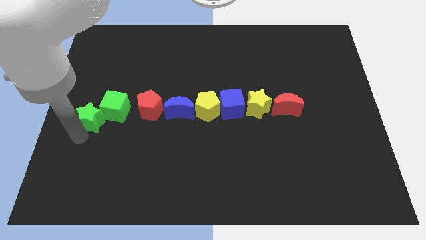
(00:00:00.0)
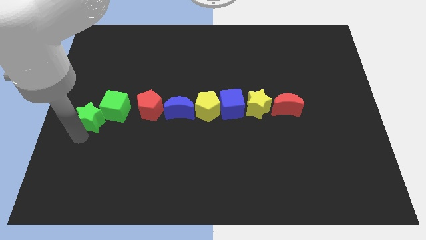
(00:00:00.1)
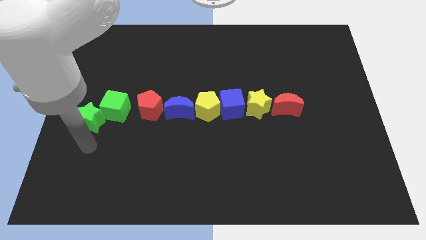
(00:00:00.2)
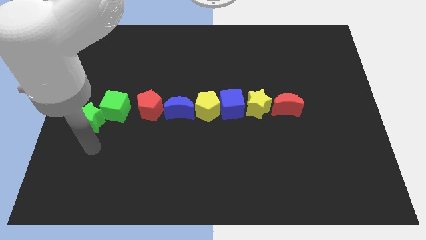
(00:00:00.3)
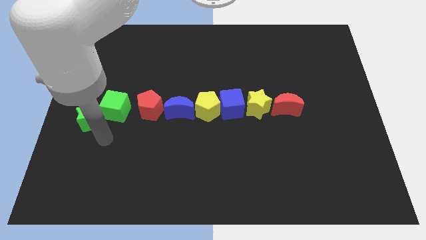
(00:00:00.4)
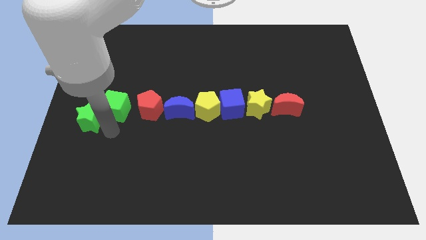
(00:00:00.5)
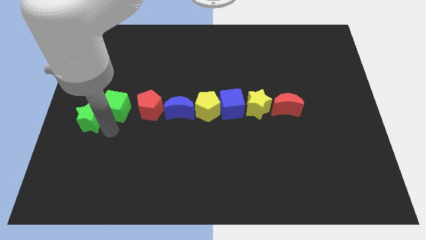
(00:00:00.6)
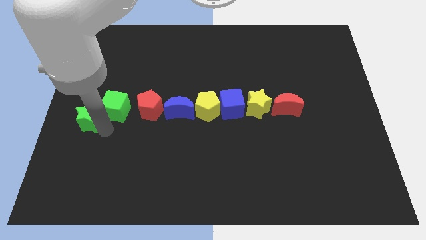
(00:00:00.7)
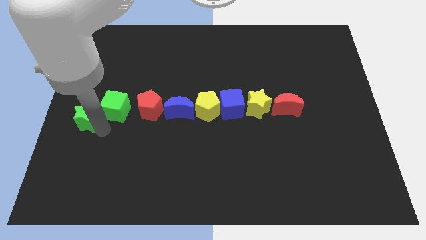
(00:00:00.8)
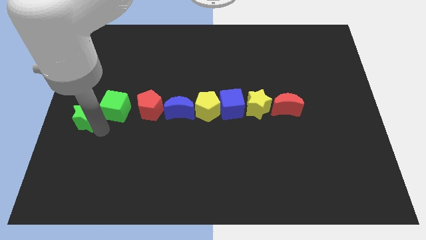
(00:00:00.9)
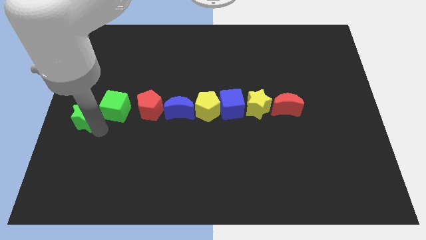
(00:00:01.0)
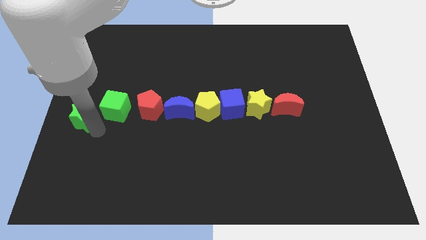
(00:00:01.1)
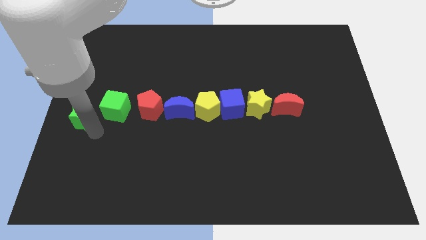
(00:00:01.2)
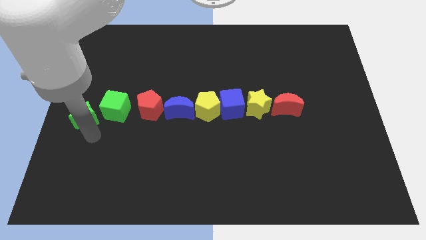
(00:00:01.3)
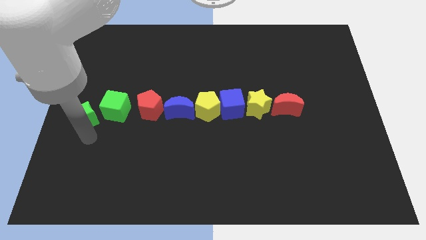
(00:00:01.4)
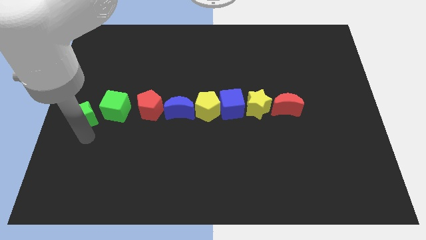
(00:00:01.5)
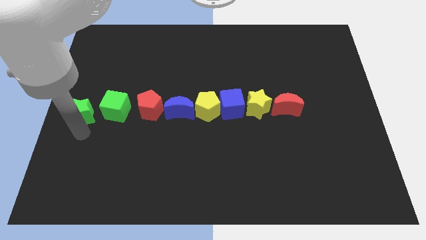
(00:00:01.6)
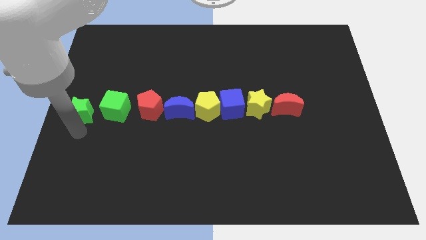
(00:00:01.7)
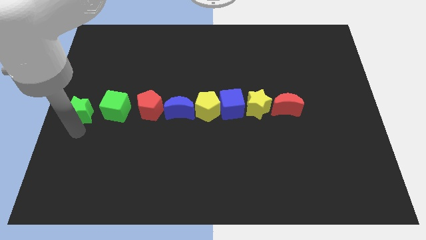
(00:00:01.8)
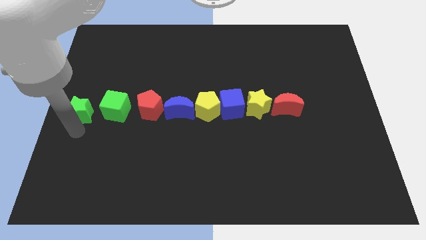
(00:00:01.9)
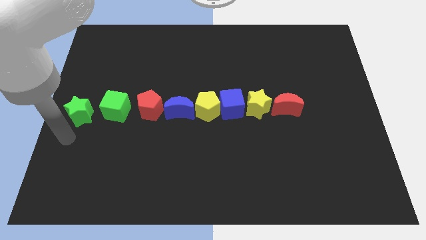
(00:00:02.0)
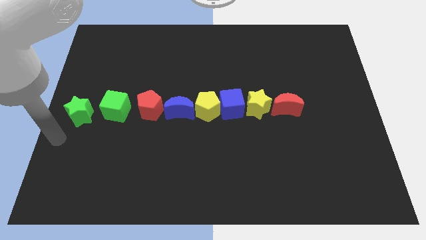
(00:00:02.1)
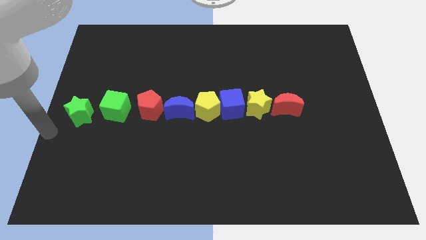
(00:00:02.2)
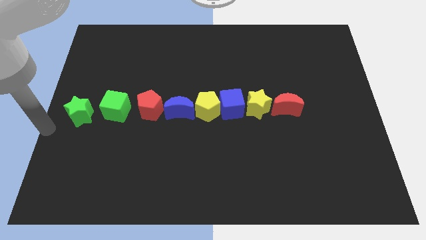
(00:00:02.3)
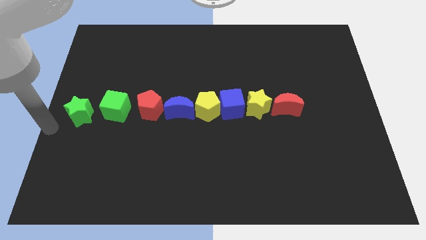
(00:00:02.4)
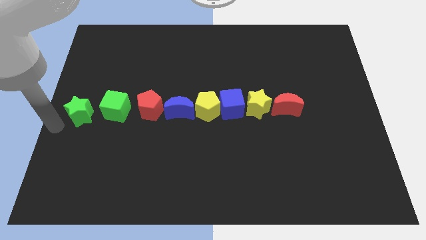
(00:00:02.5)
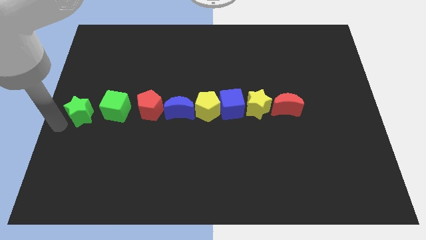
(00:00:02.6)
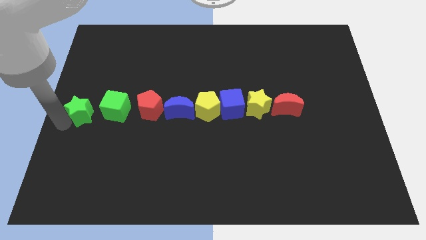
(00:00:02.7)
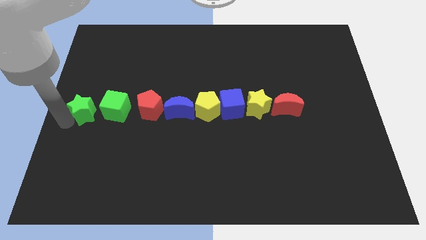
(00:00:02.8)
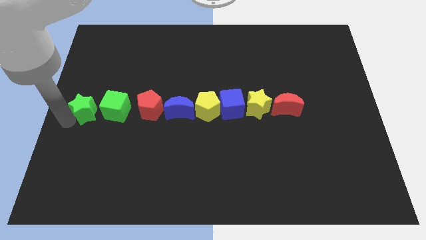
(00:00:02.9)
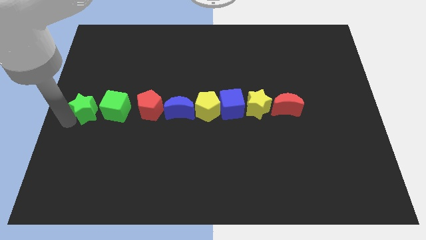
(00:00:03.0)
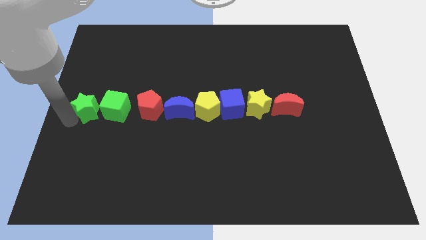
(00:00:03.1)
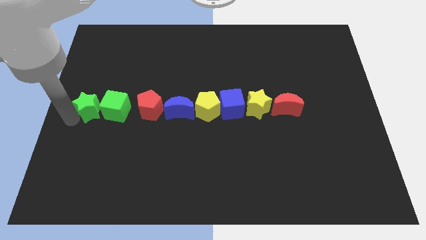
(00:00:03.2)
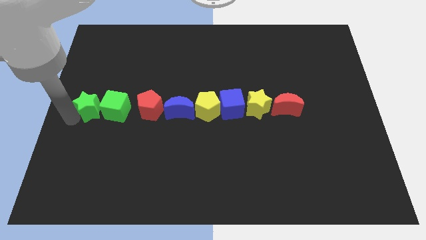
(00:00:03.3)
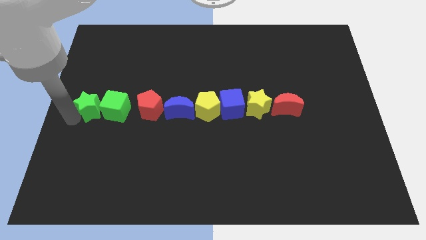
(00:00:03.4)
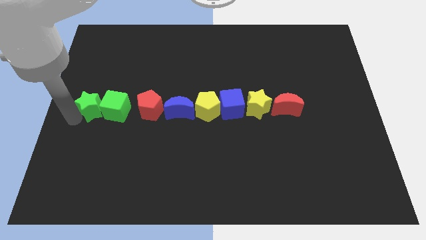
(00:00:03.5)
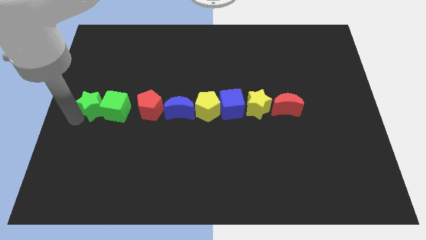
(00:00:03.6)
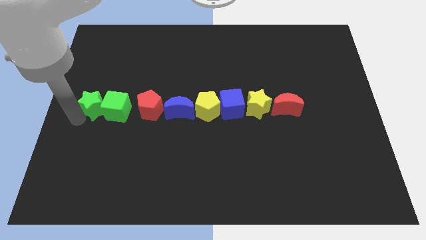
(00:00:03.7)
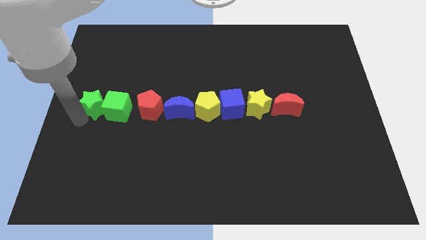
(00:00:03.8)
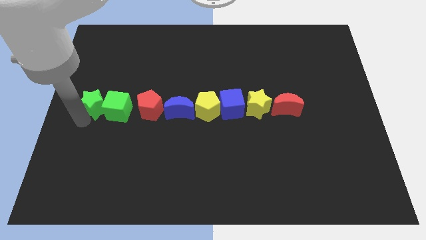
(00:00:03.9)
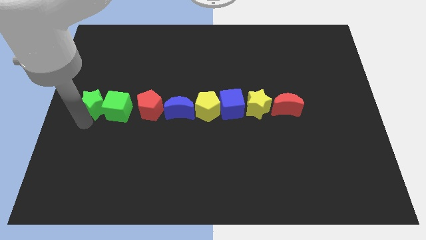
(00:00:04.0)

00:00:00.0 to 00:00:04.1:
place green star into the green cube

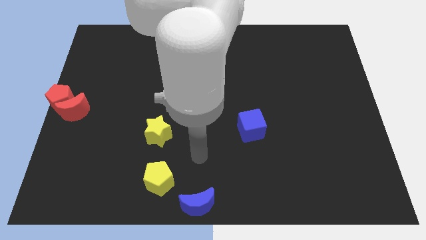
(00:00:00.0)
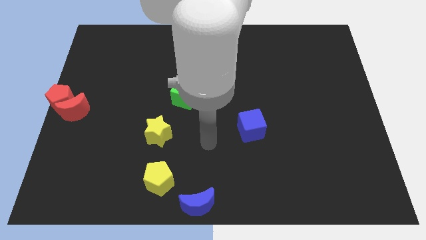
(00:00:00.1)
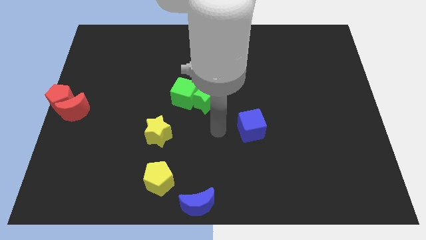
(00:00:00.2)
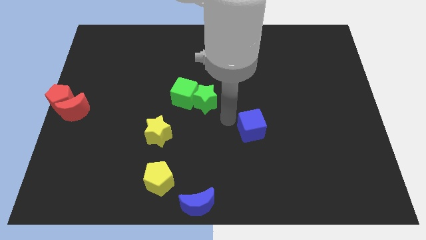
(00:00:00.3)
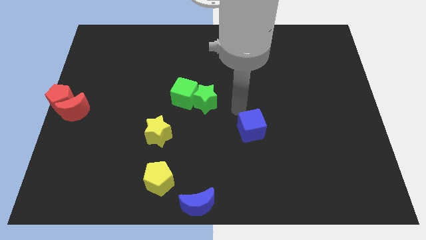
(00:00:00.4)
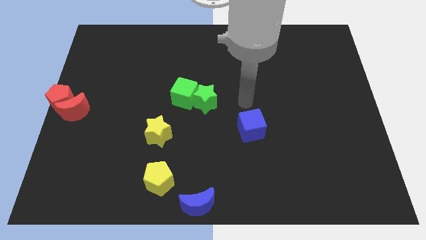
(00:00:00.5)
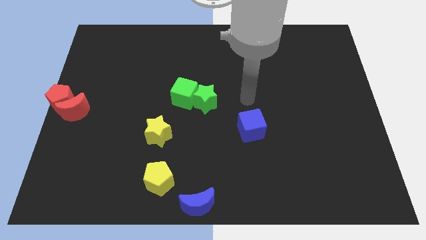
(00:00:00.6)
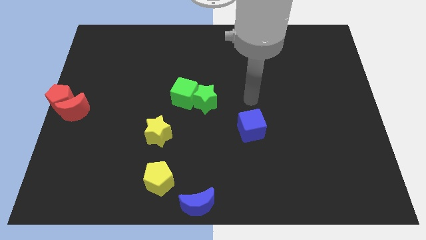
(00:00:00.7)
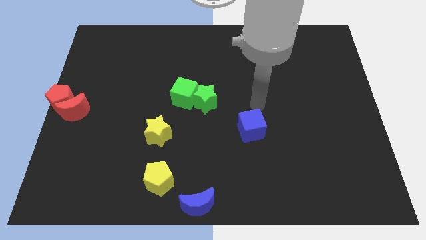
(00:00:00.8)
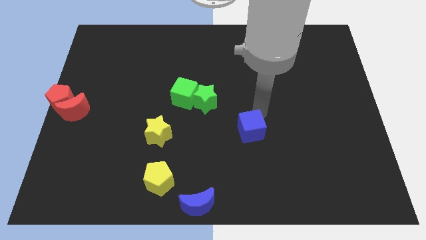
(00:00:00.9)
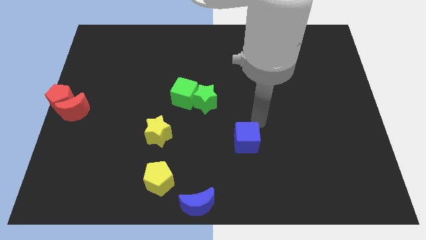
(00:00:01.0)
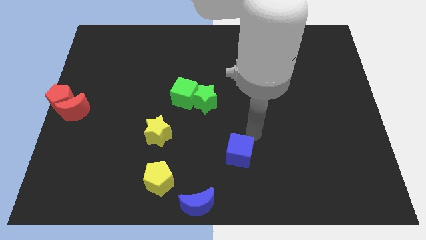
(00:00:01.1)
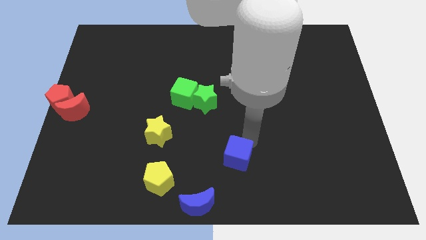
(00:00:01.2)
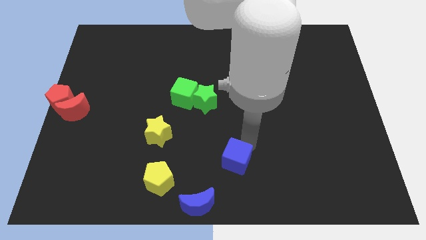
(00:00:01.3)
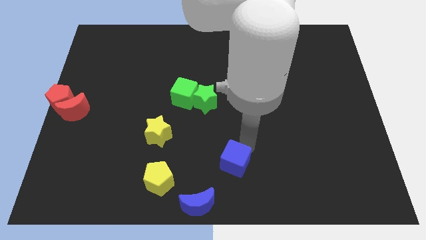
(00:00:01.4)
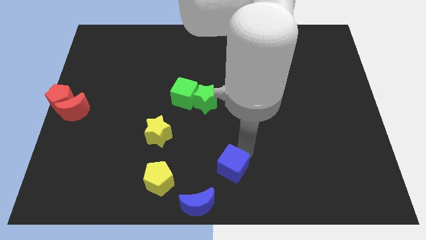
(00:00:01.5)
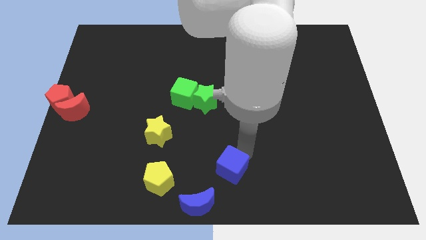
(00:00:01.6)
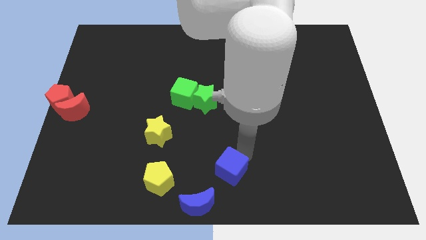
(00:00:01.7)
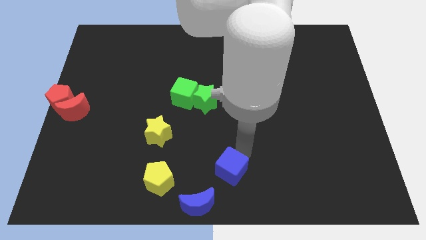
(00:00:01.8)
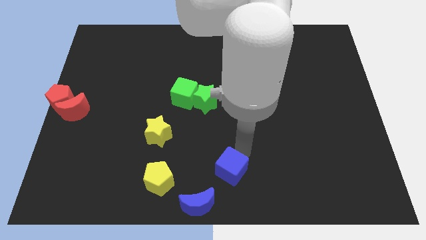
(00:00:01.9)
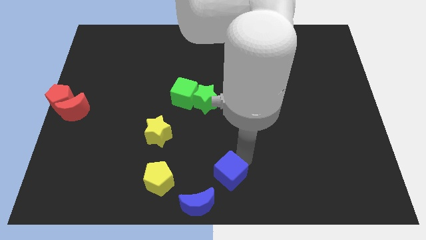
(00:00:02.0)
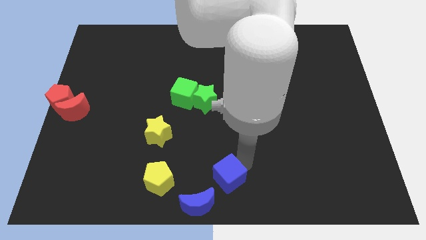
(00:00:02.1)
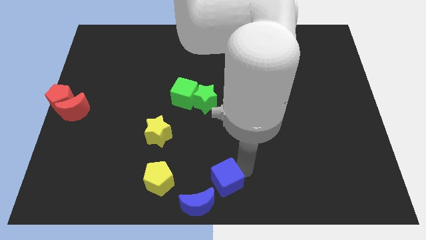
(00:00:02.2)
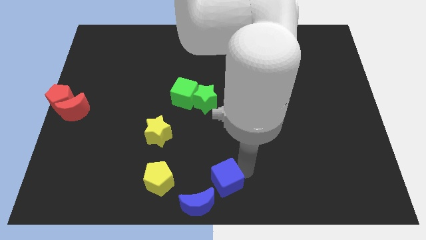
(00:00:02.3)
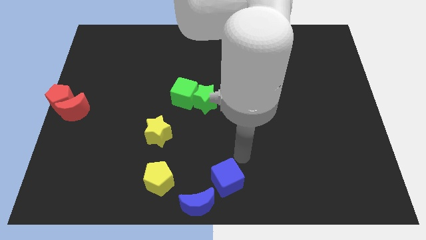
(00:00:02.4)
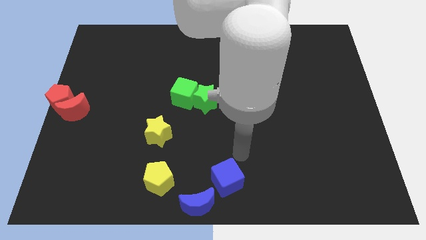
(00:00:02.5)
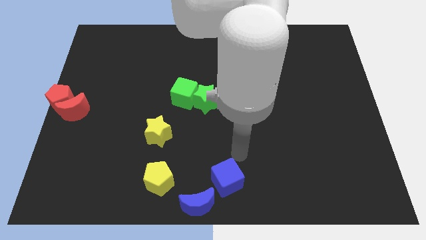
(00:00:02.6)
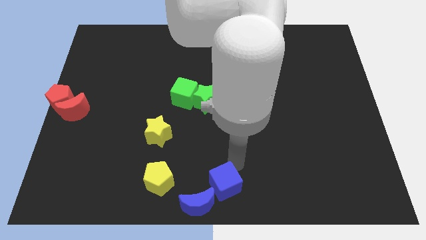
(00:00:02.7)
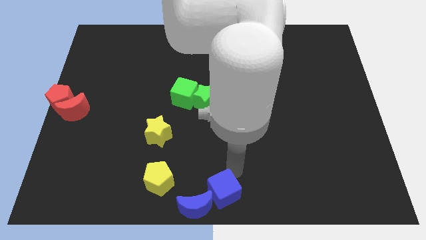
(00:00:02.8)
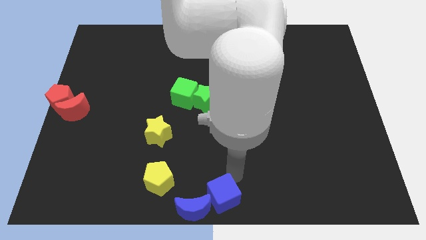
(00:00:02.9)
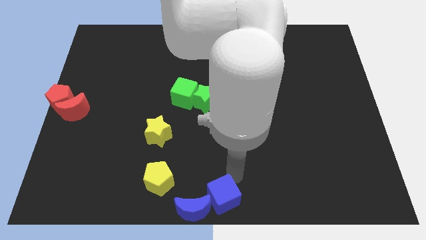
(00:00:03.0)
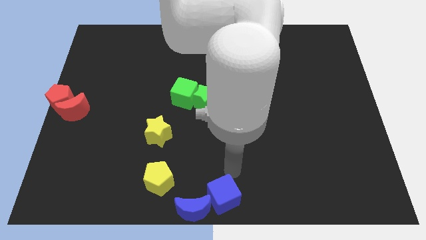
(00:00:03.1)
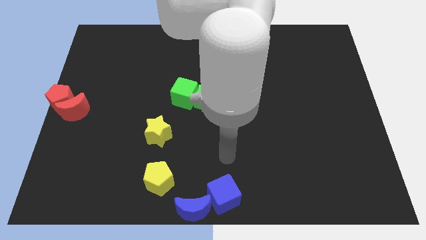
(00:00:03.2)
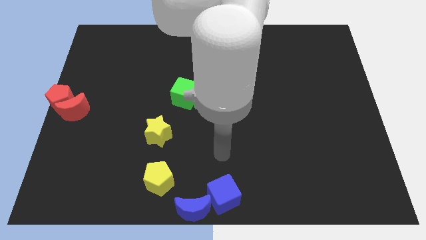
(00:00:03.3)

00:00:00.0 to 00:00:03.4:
place the blue cube to the right side of the blue moon

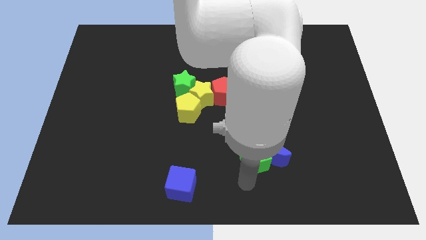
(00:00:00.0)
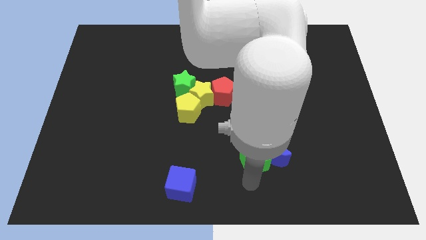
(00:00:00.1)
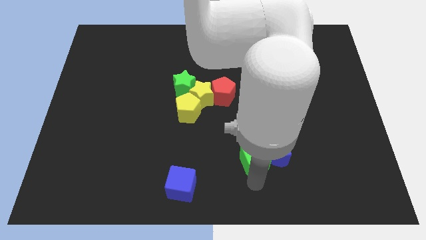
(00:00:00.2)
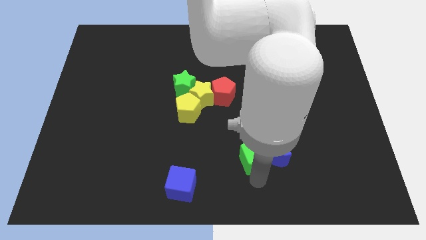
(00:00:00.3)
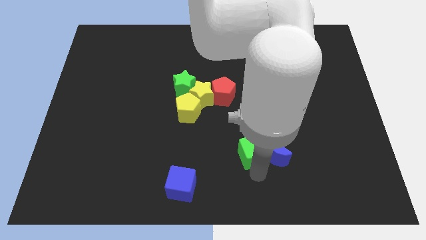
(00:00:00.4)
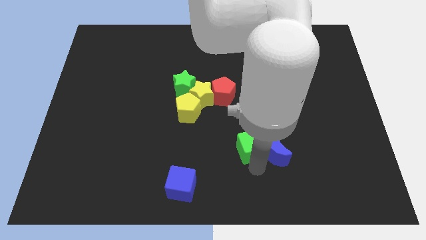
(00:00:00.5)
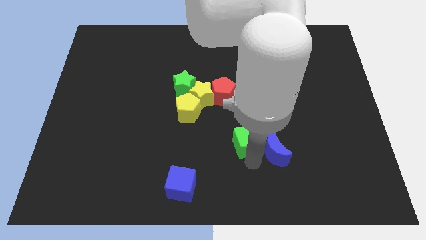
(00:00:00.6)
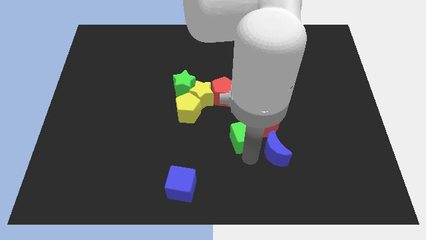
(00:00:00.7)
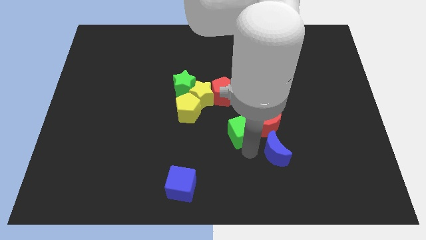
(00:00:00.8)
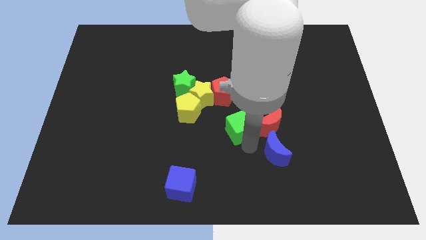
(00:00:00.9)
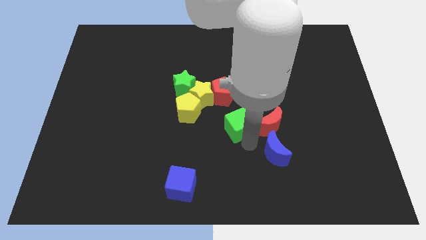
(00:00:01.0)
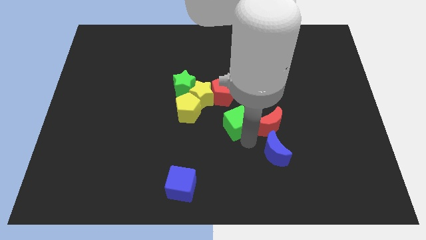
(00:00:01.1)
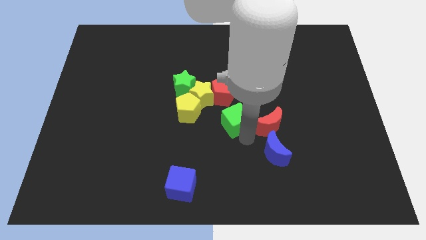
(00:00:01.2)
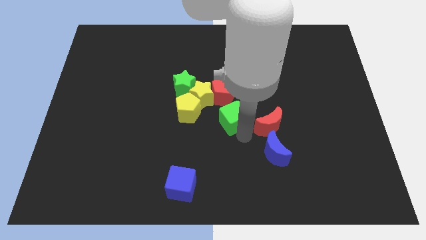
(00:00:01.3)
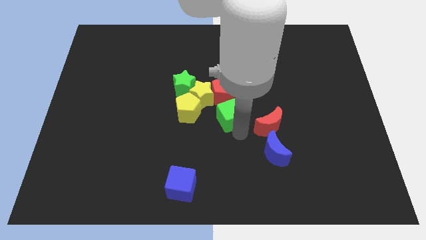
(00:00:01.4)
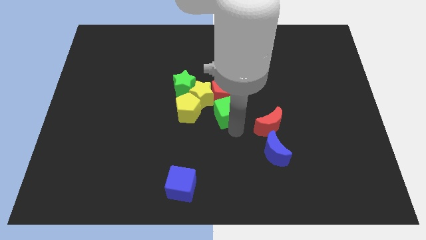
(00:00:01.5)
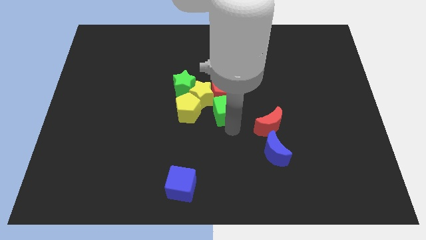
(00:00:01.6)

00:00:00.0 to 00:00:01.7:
move the green cube into red pentagon
